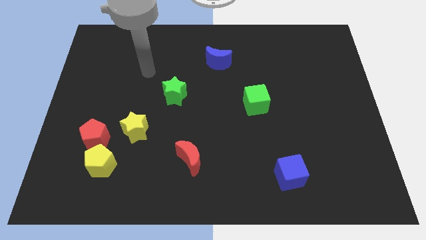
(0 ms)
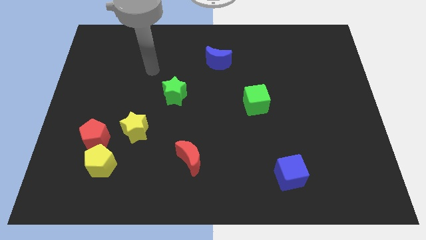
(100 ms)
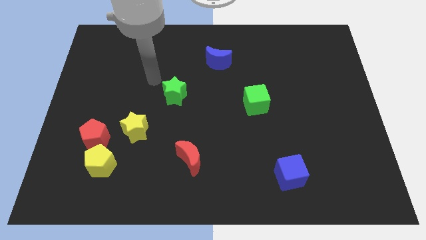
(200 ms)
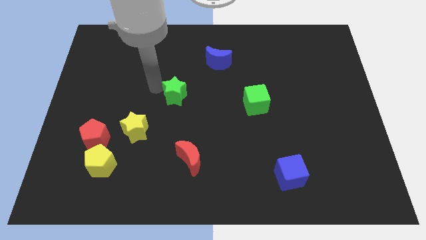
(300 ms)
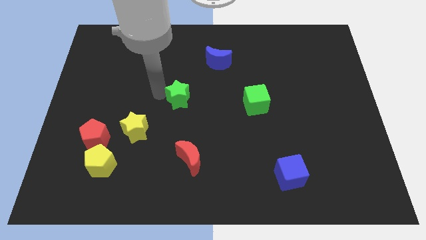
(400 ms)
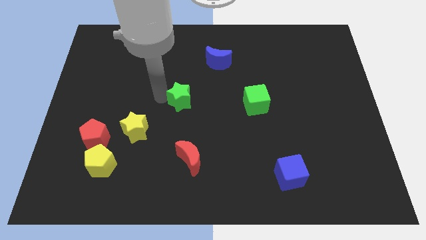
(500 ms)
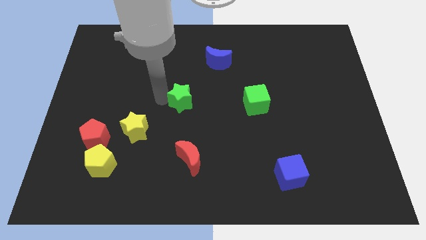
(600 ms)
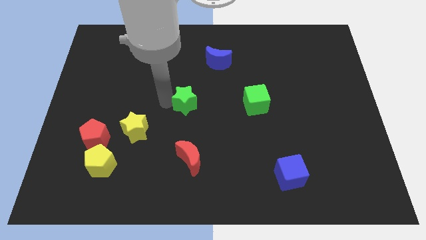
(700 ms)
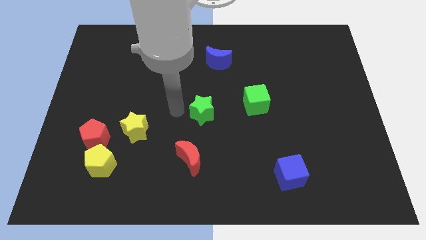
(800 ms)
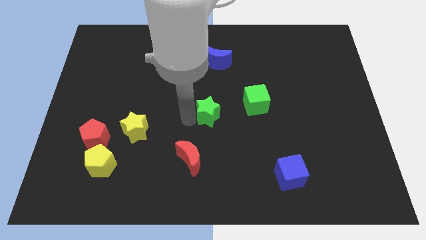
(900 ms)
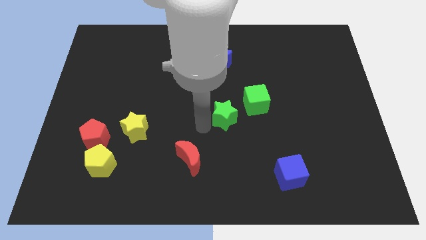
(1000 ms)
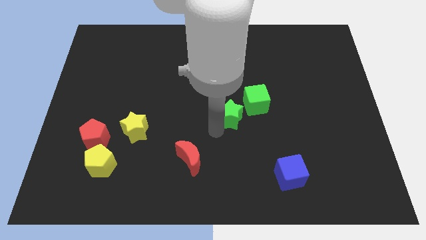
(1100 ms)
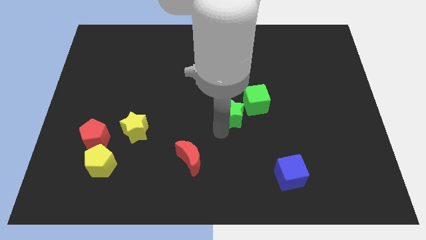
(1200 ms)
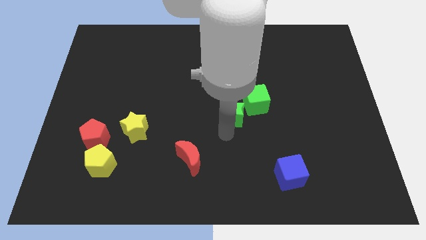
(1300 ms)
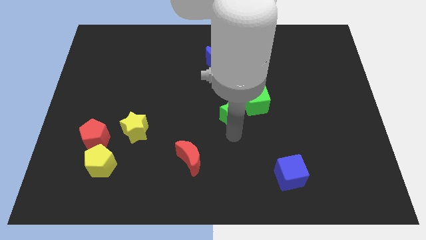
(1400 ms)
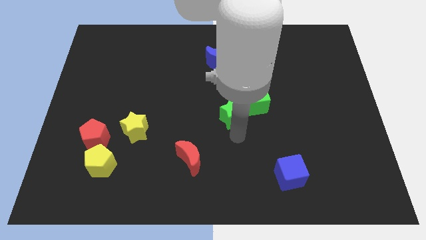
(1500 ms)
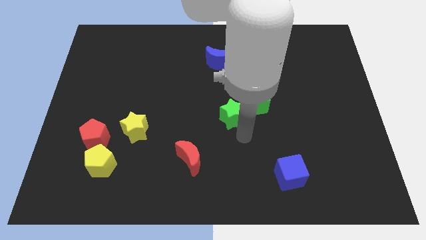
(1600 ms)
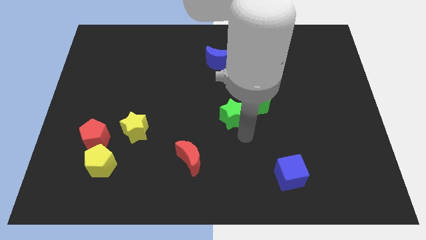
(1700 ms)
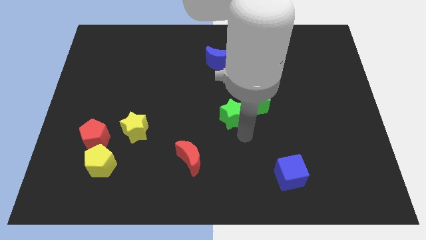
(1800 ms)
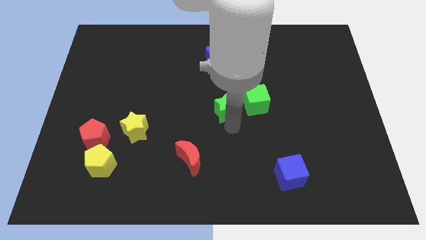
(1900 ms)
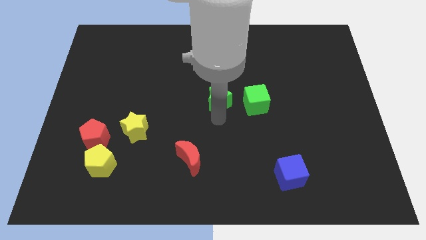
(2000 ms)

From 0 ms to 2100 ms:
push the green star to the left side of the green cube

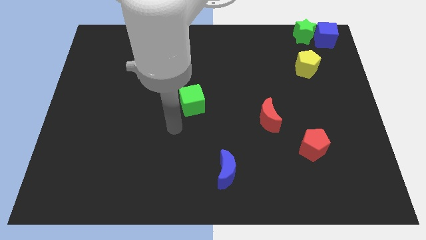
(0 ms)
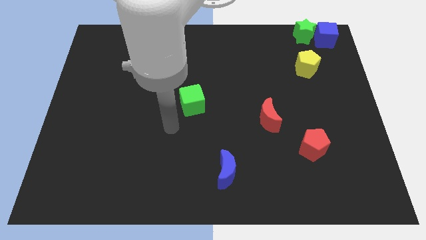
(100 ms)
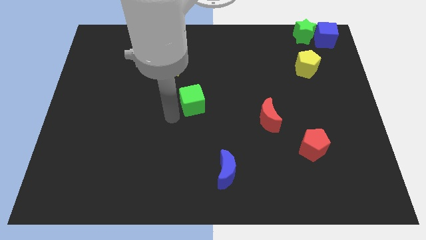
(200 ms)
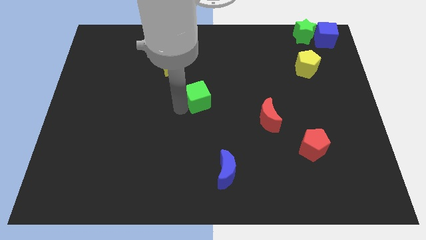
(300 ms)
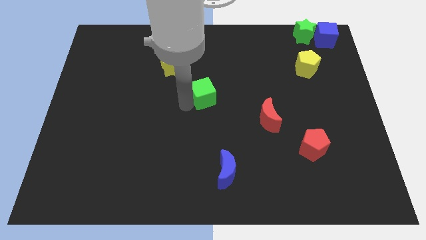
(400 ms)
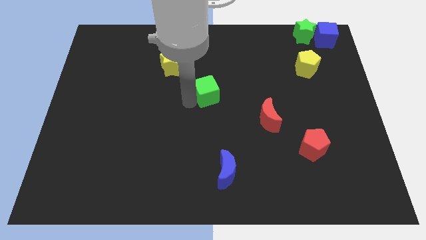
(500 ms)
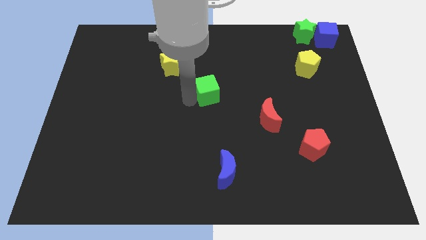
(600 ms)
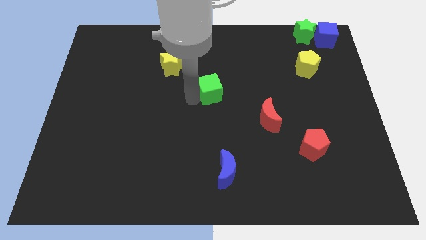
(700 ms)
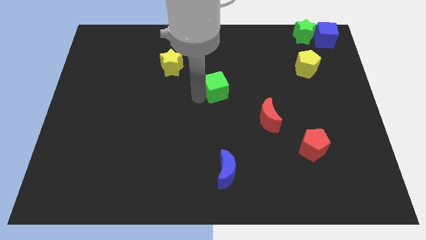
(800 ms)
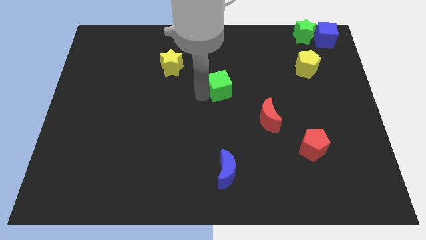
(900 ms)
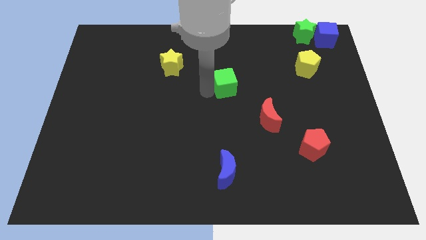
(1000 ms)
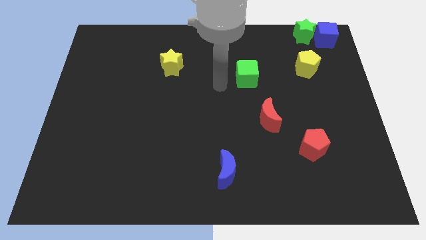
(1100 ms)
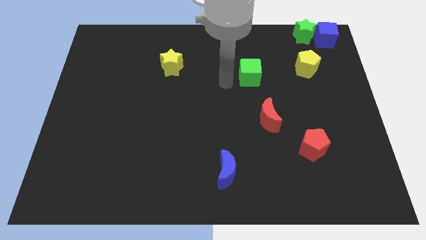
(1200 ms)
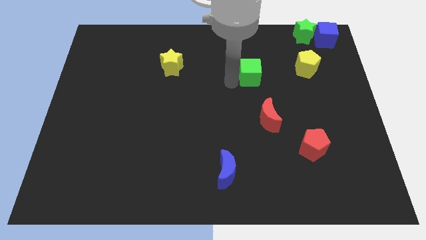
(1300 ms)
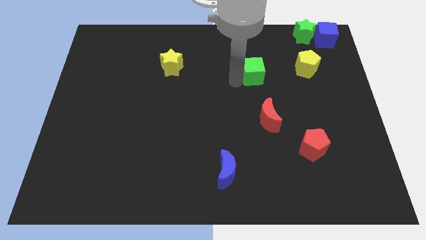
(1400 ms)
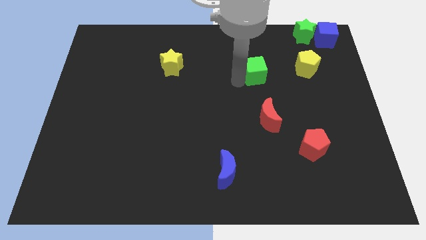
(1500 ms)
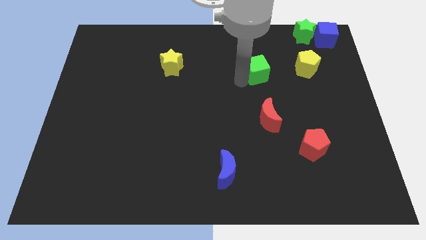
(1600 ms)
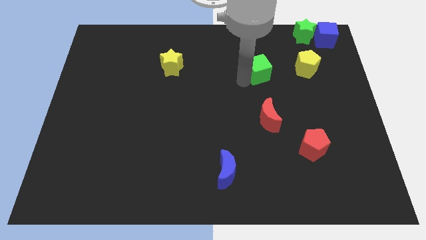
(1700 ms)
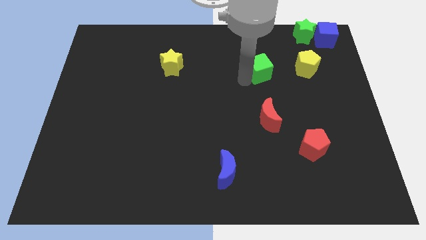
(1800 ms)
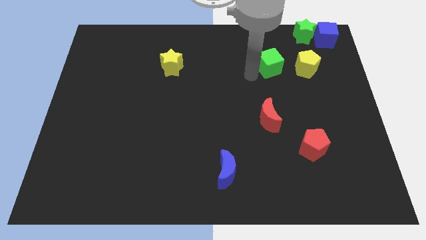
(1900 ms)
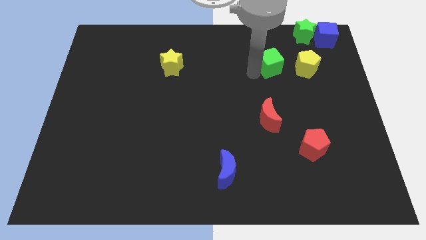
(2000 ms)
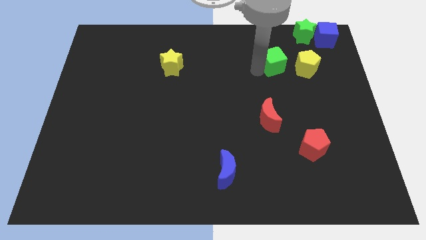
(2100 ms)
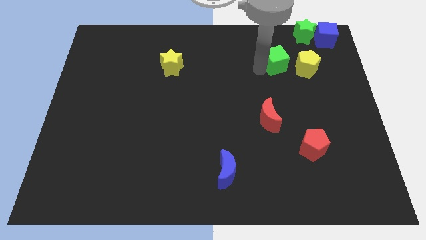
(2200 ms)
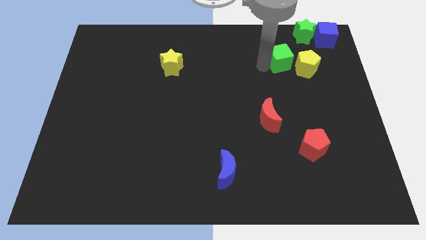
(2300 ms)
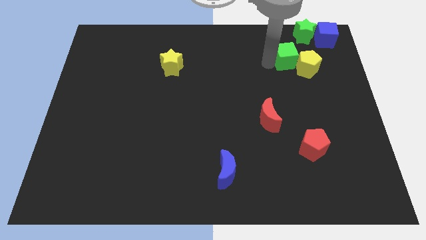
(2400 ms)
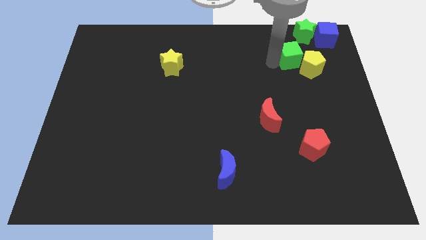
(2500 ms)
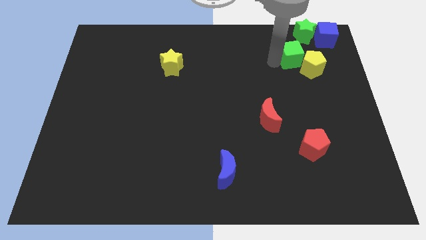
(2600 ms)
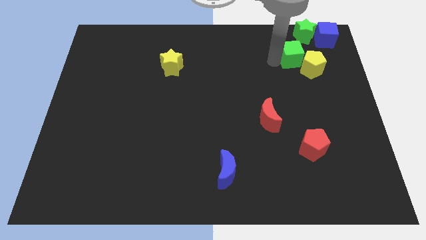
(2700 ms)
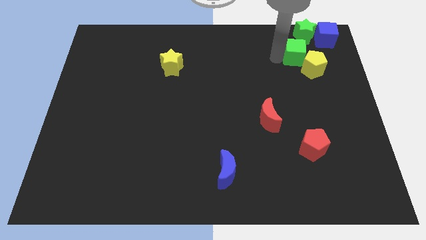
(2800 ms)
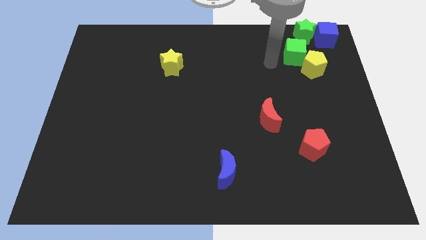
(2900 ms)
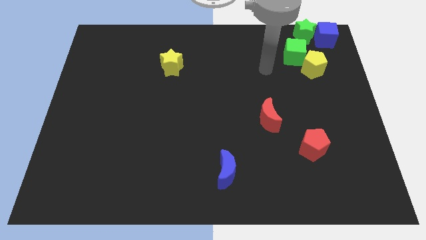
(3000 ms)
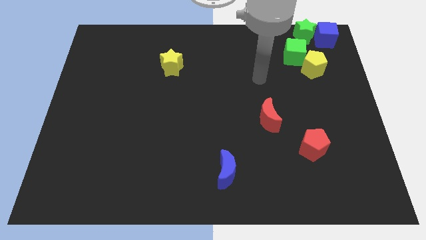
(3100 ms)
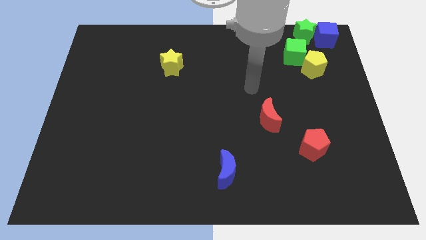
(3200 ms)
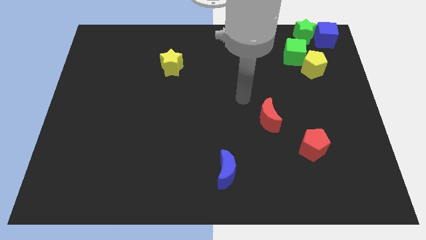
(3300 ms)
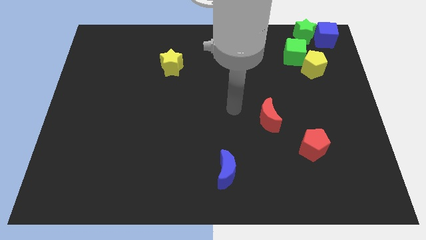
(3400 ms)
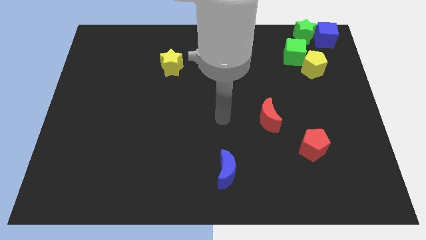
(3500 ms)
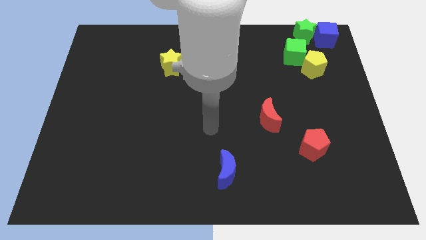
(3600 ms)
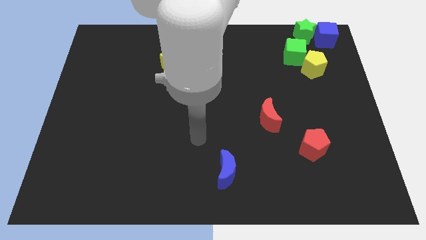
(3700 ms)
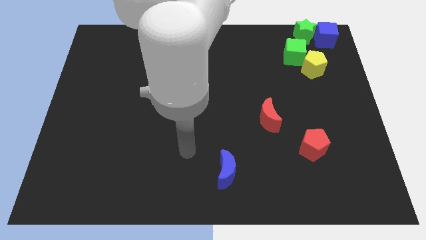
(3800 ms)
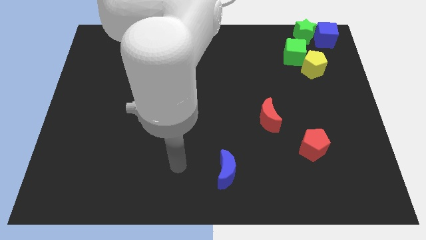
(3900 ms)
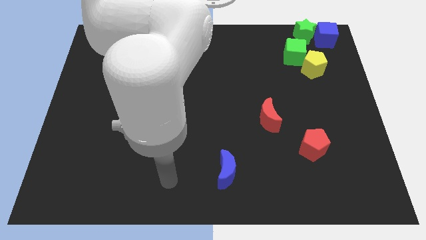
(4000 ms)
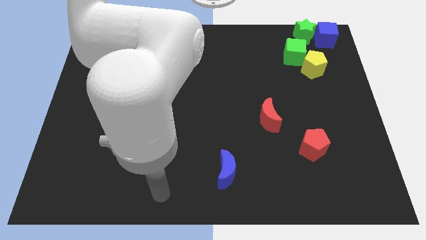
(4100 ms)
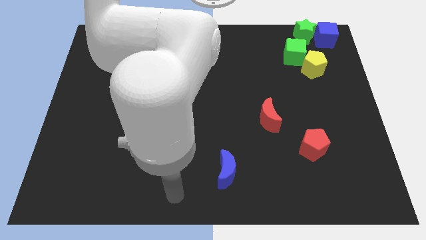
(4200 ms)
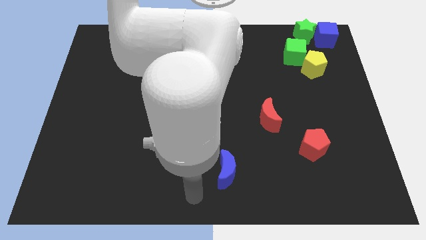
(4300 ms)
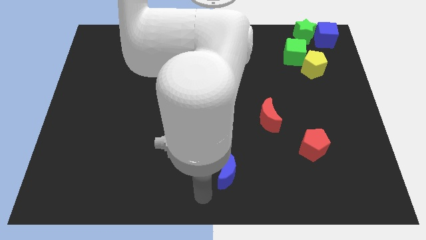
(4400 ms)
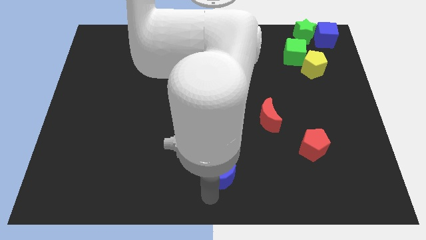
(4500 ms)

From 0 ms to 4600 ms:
move the green cube below the green star

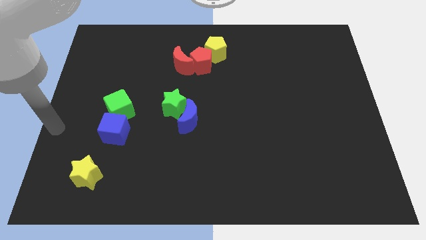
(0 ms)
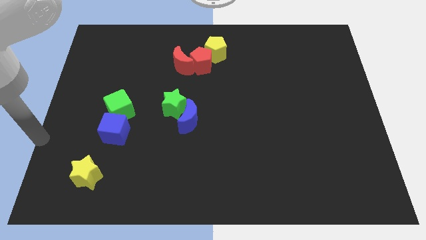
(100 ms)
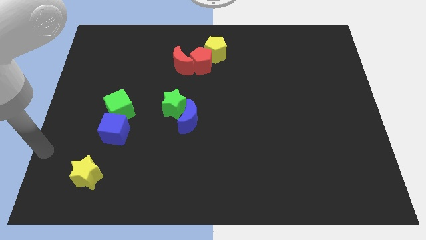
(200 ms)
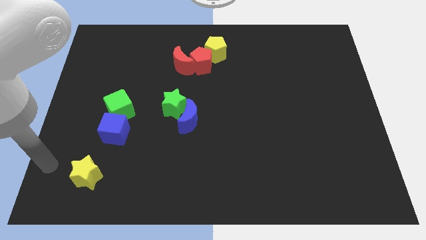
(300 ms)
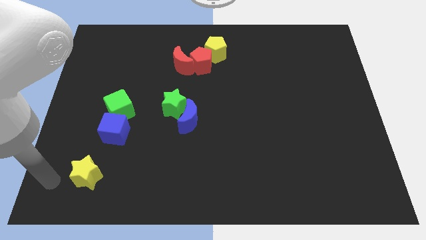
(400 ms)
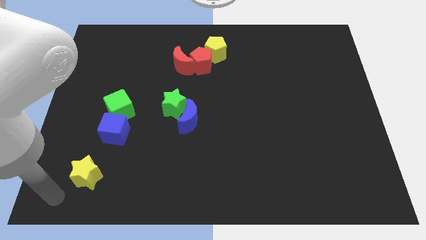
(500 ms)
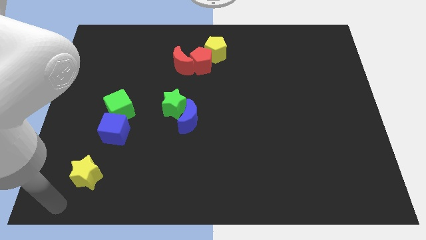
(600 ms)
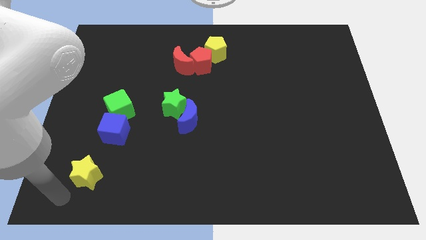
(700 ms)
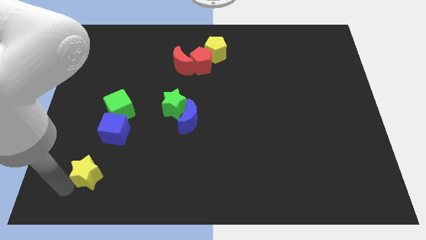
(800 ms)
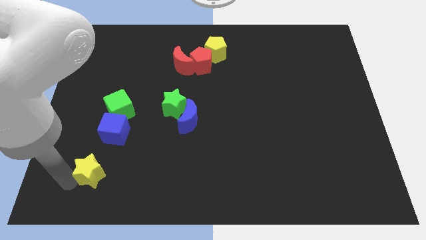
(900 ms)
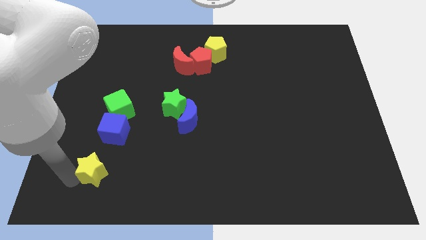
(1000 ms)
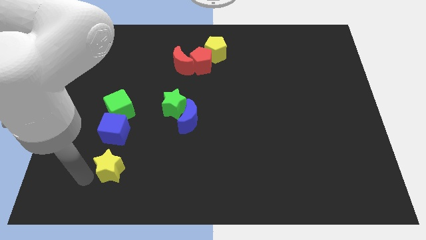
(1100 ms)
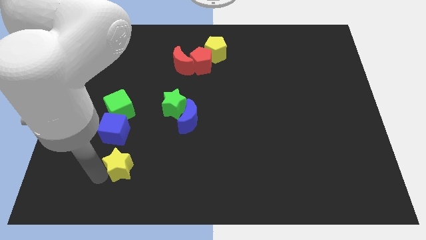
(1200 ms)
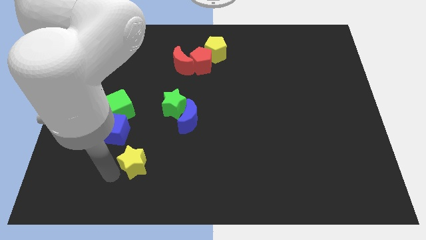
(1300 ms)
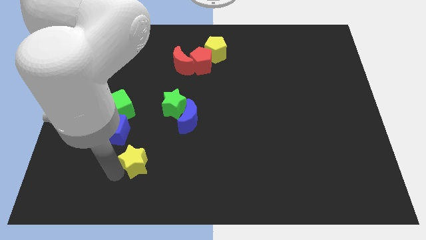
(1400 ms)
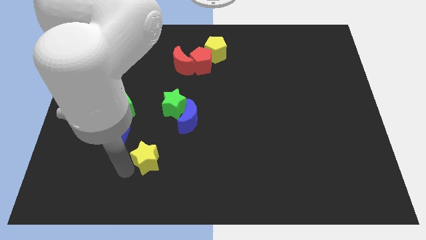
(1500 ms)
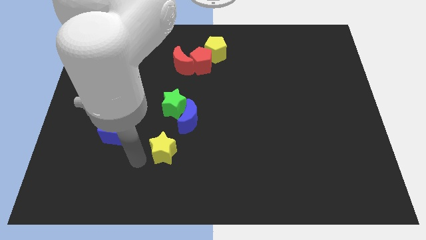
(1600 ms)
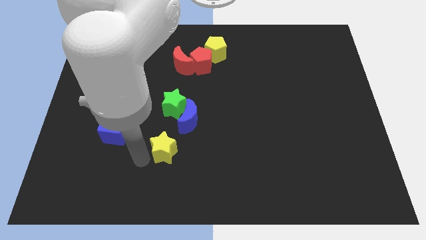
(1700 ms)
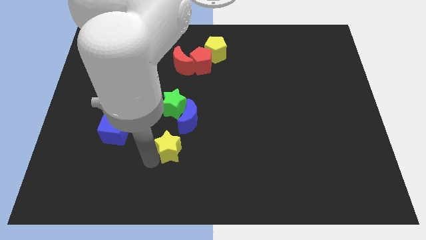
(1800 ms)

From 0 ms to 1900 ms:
move the yellow star diagonal below blue moon

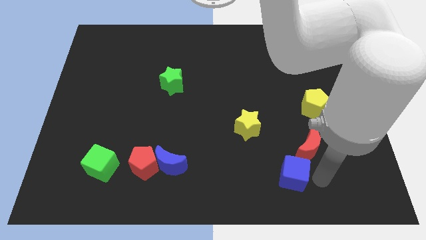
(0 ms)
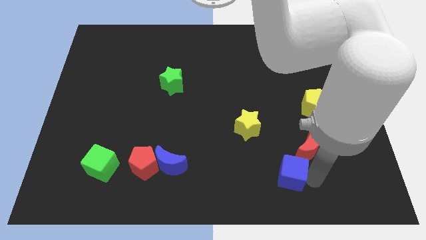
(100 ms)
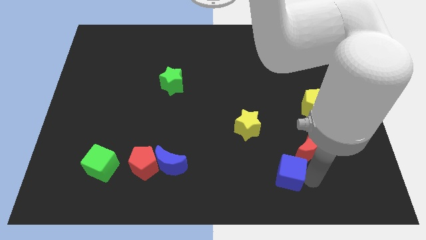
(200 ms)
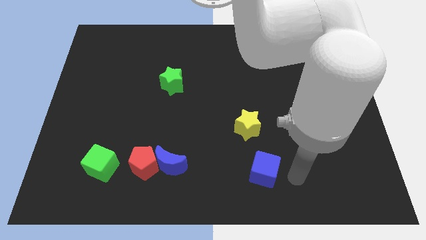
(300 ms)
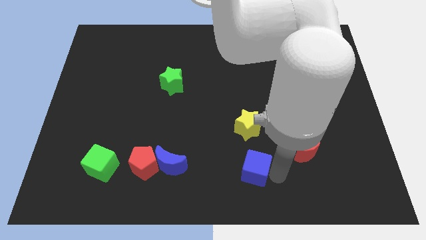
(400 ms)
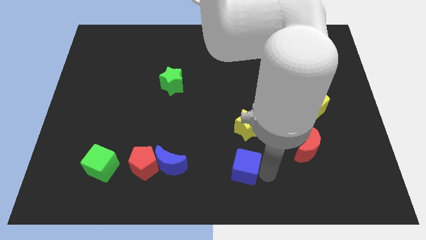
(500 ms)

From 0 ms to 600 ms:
push blue cube below yellow star
